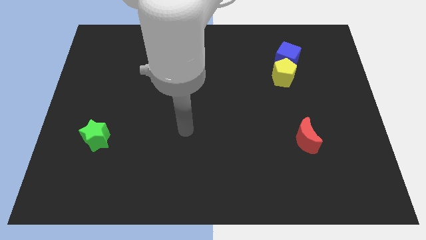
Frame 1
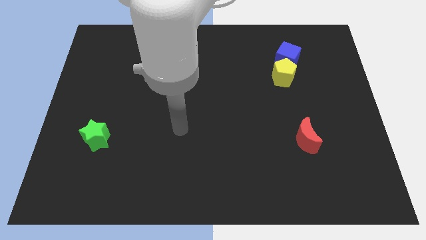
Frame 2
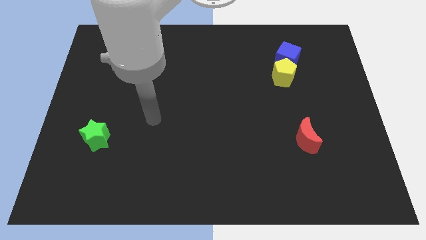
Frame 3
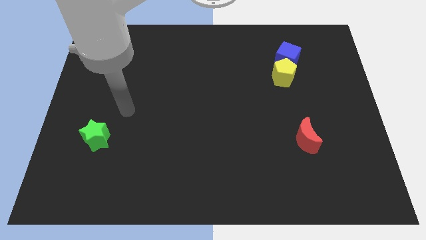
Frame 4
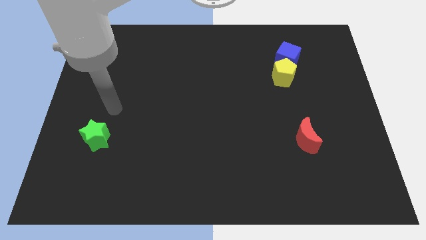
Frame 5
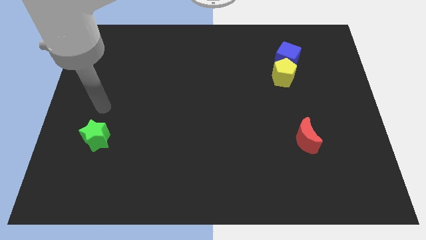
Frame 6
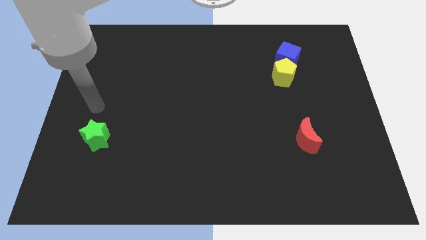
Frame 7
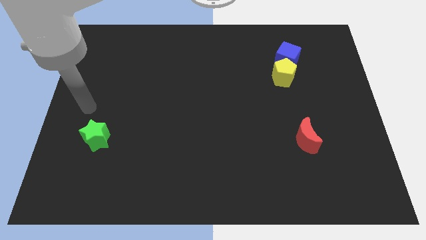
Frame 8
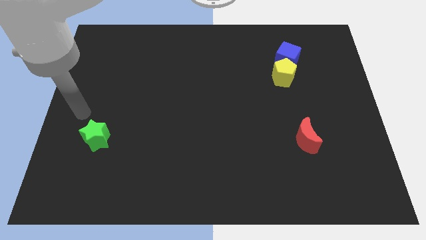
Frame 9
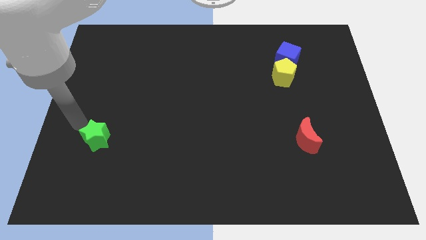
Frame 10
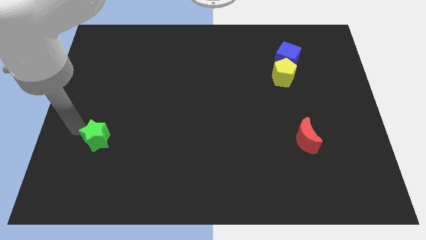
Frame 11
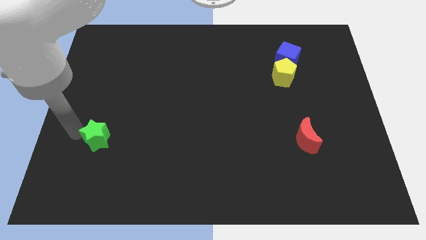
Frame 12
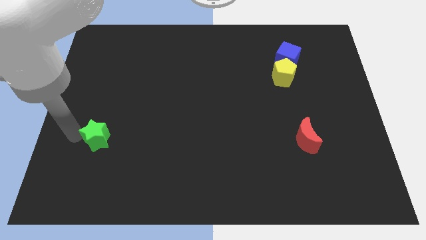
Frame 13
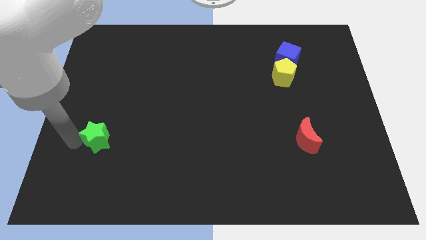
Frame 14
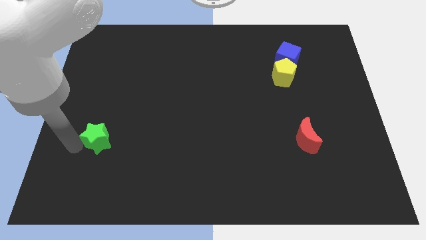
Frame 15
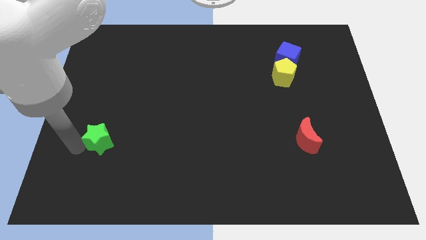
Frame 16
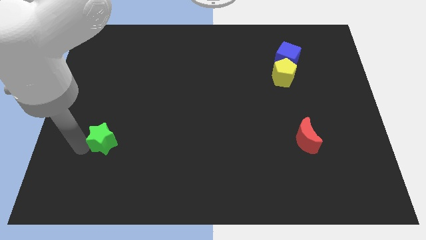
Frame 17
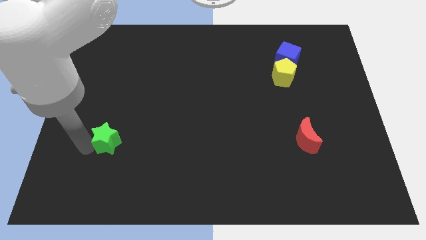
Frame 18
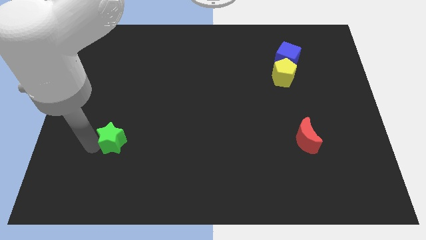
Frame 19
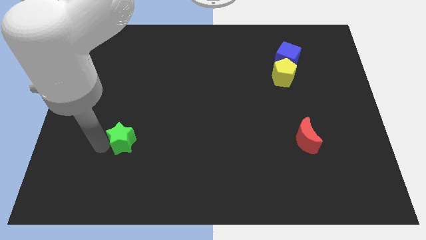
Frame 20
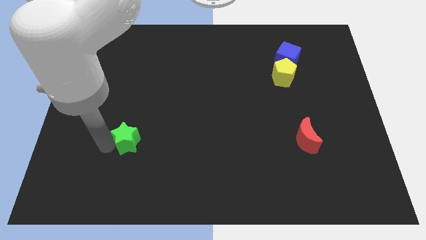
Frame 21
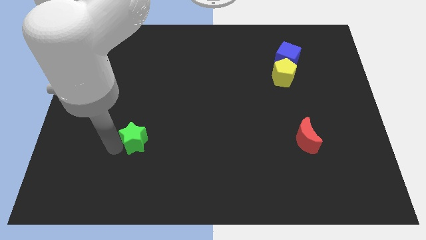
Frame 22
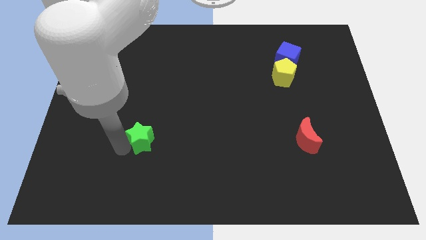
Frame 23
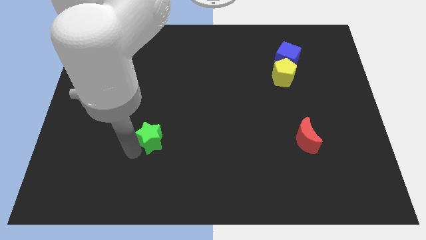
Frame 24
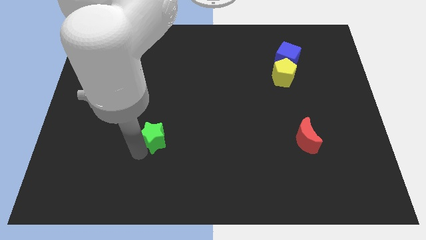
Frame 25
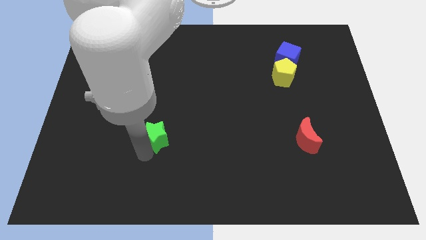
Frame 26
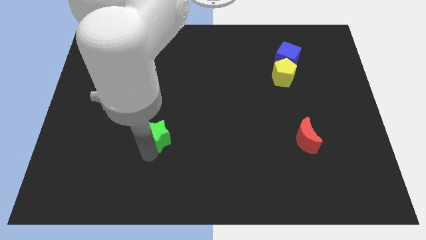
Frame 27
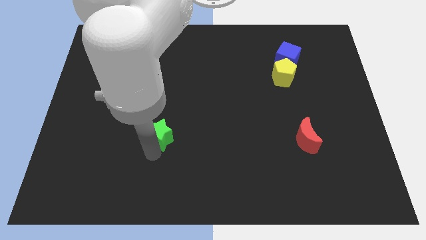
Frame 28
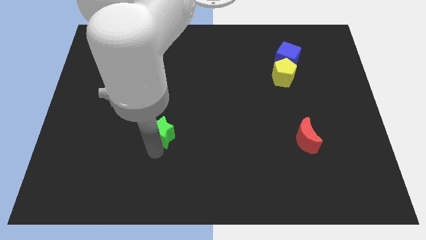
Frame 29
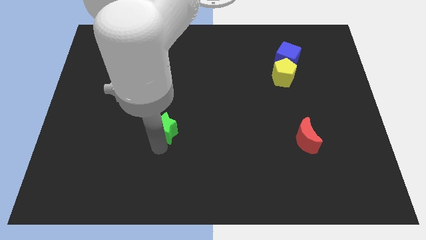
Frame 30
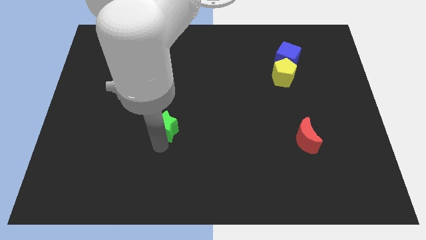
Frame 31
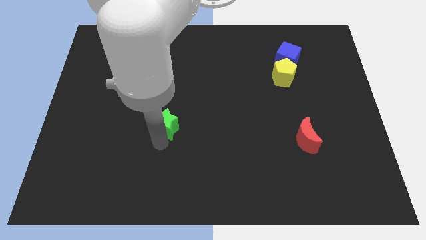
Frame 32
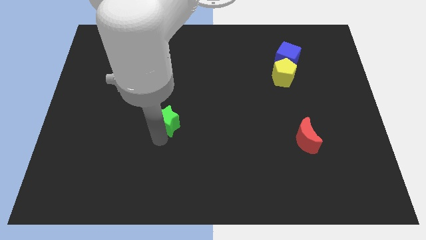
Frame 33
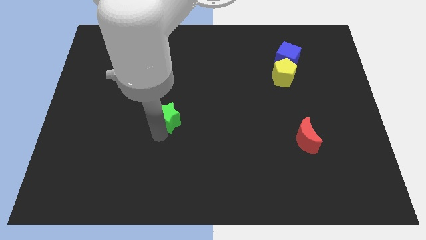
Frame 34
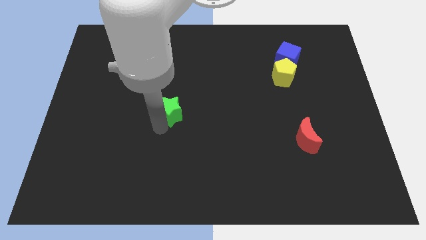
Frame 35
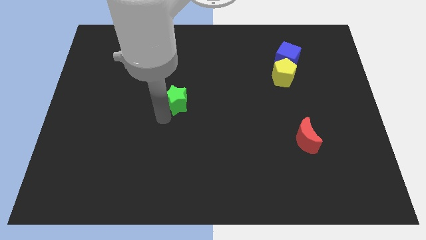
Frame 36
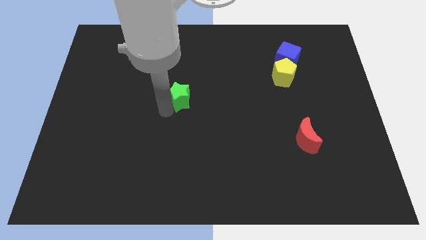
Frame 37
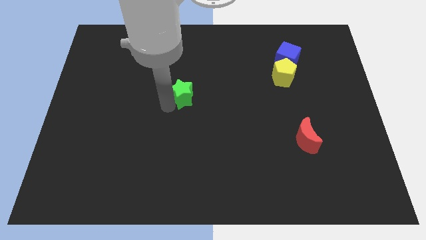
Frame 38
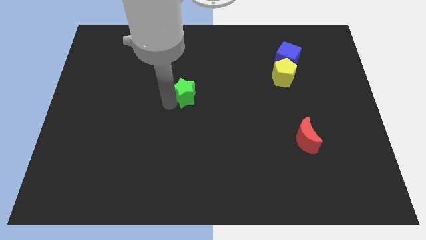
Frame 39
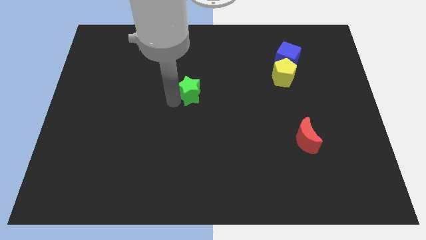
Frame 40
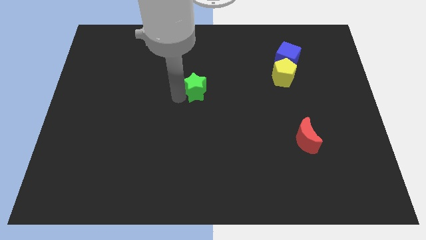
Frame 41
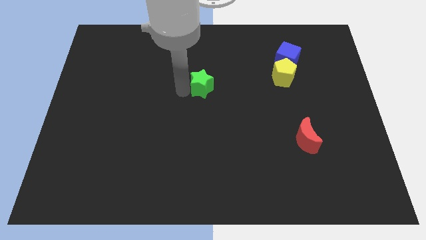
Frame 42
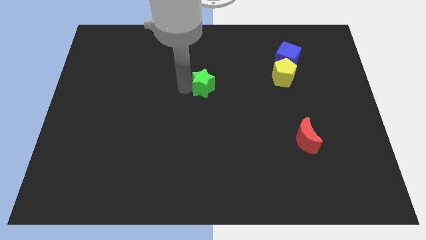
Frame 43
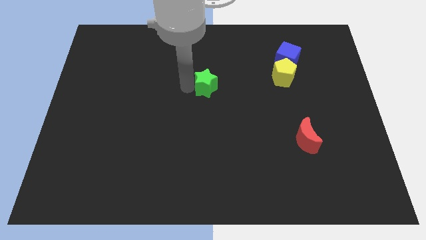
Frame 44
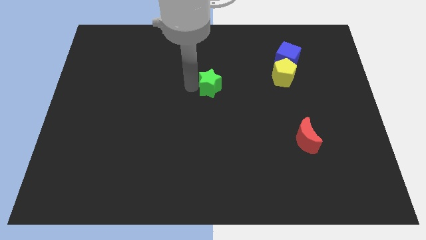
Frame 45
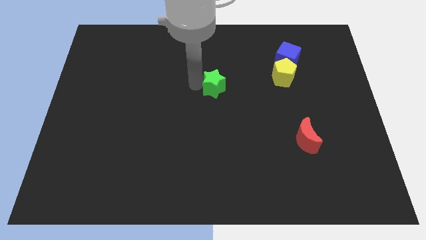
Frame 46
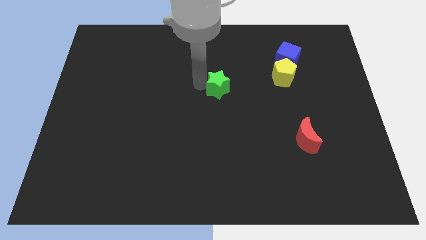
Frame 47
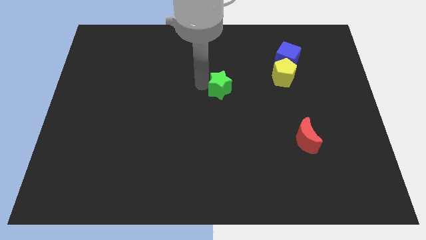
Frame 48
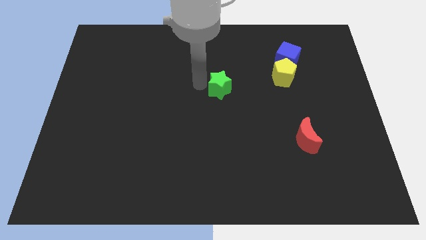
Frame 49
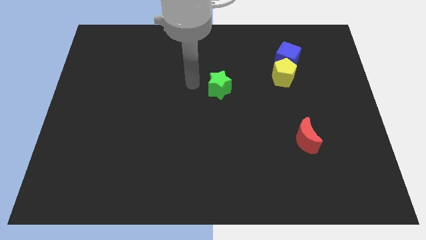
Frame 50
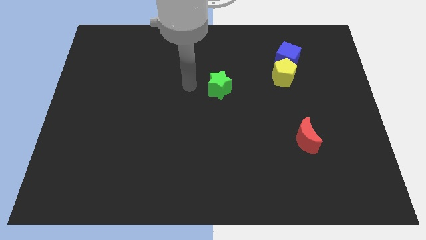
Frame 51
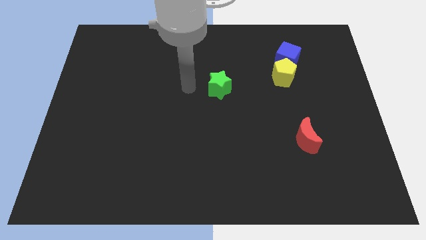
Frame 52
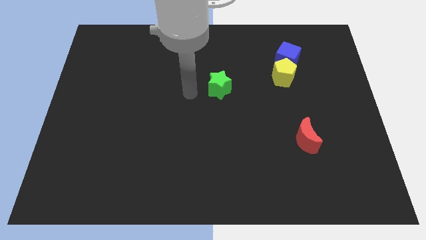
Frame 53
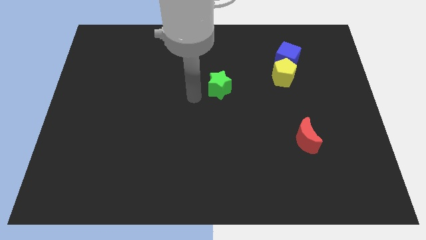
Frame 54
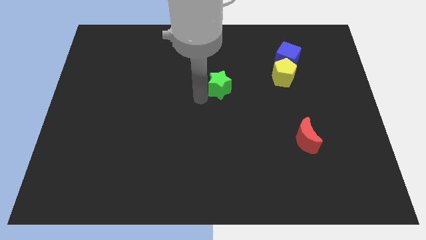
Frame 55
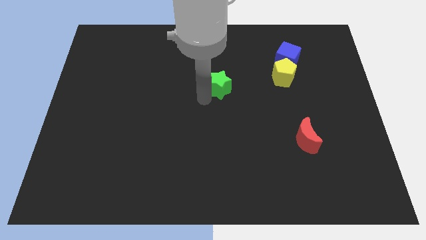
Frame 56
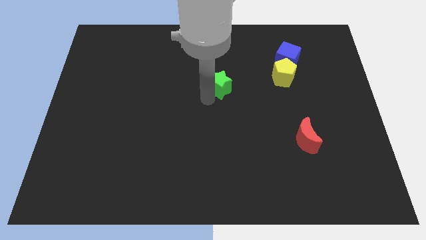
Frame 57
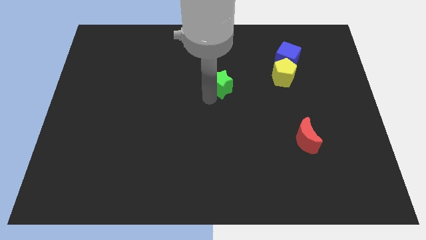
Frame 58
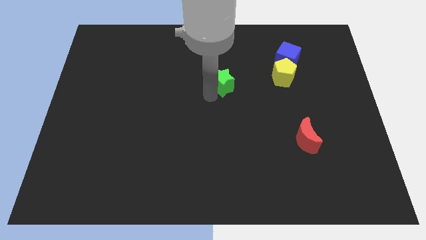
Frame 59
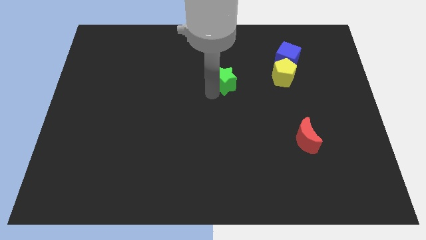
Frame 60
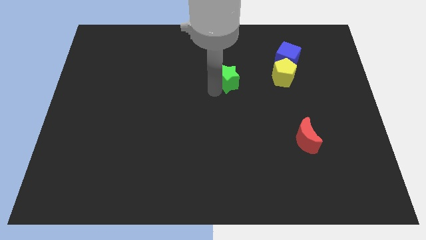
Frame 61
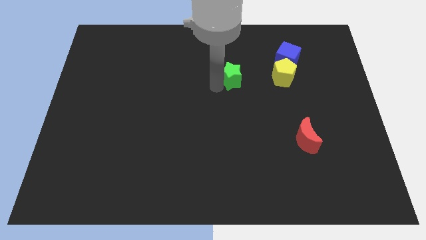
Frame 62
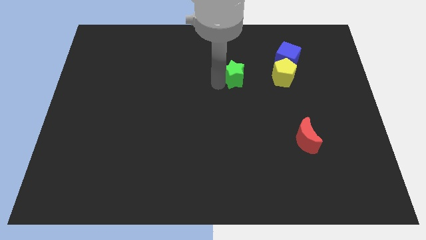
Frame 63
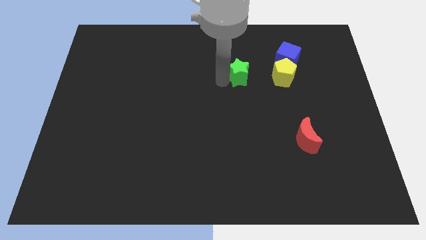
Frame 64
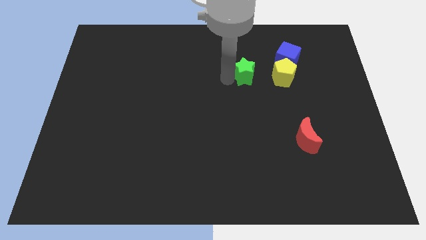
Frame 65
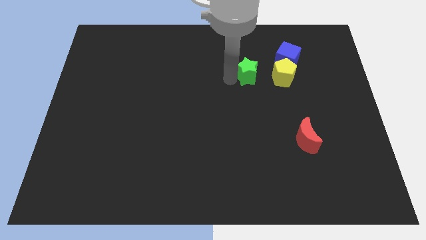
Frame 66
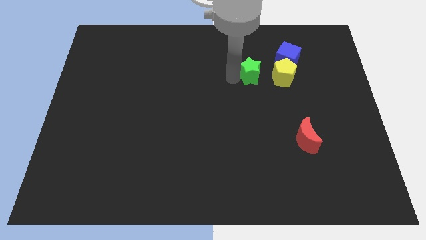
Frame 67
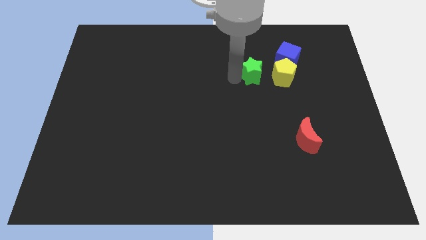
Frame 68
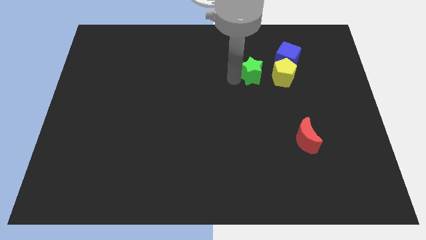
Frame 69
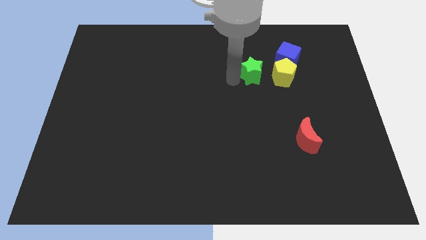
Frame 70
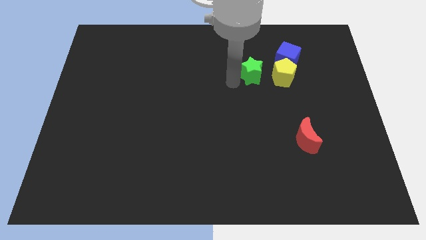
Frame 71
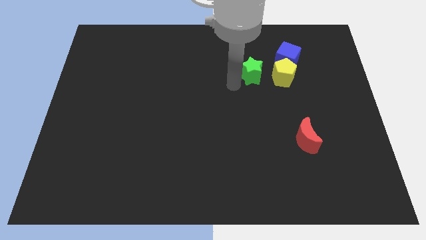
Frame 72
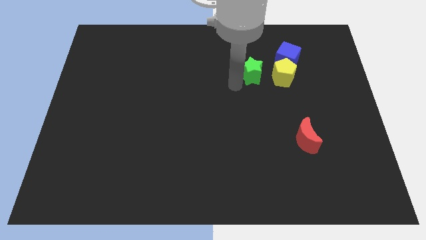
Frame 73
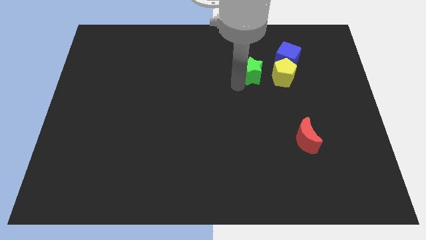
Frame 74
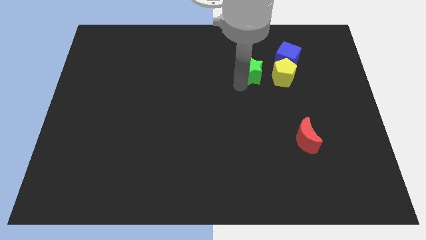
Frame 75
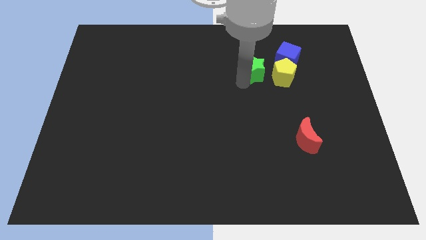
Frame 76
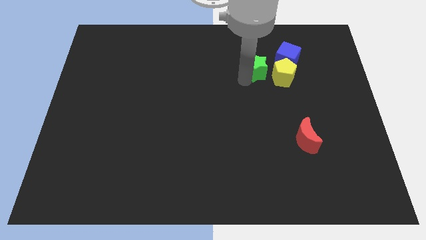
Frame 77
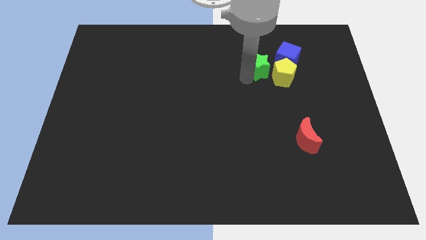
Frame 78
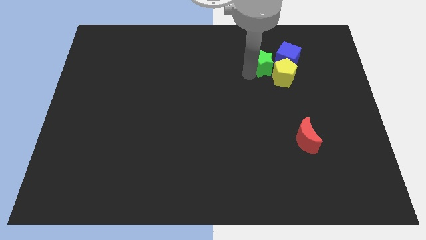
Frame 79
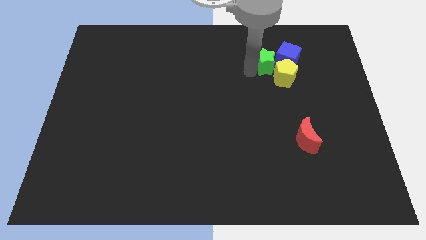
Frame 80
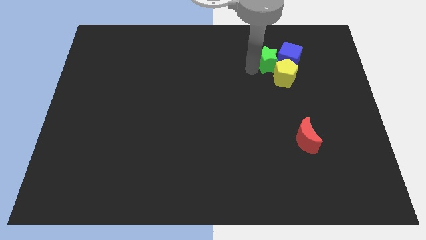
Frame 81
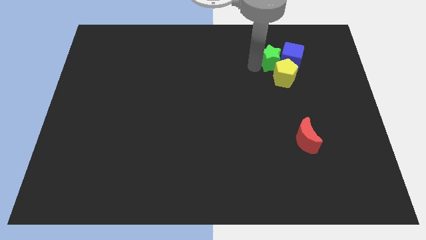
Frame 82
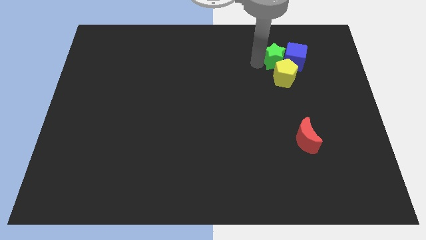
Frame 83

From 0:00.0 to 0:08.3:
move the green star to the blue block
